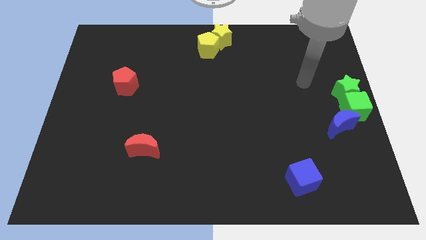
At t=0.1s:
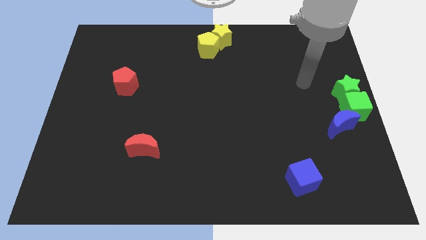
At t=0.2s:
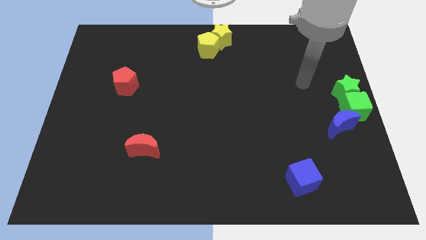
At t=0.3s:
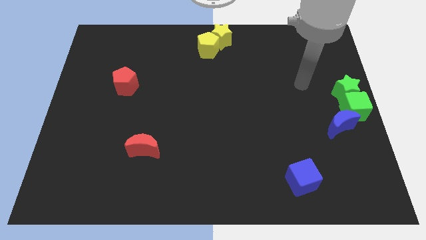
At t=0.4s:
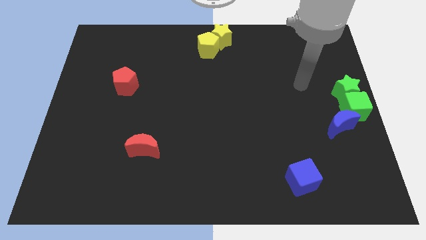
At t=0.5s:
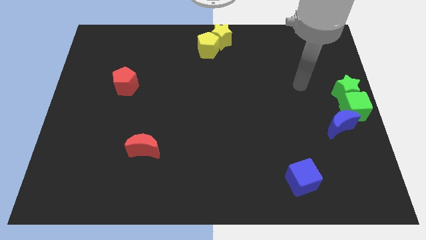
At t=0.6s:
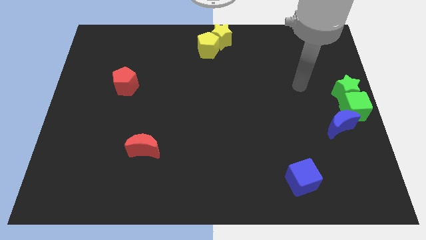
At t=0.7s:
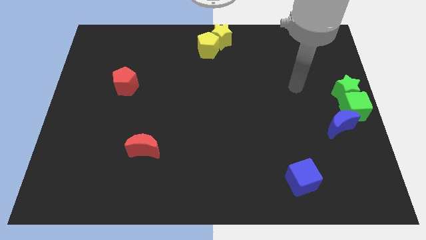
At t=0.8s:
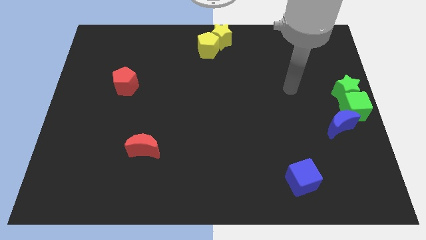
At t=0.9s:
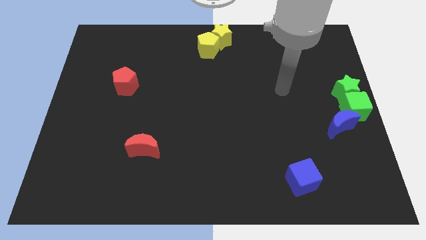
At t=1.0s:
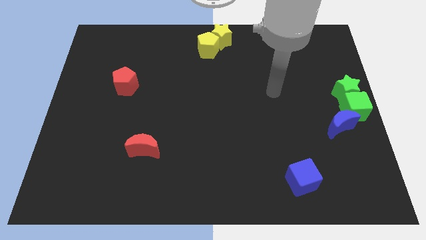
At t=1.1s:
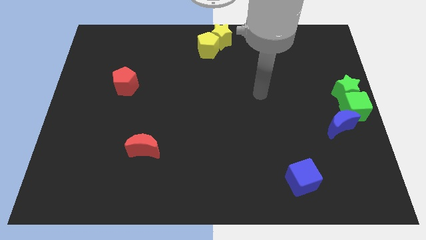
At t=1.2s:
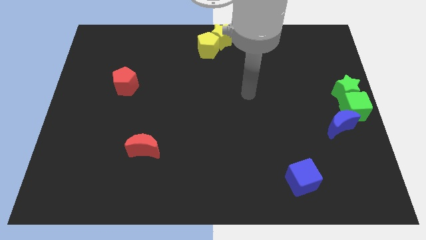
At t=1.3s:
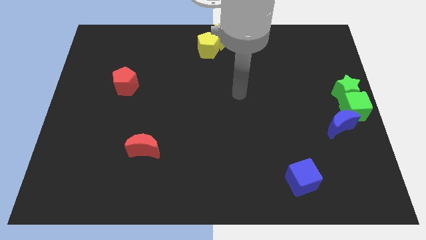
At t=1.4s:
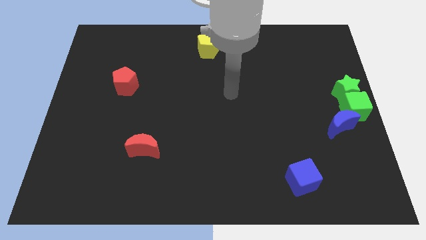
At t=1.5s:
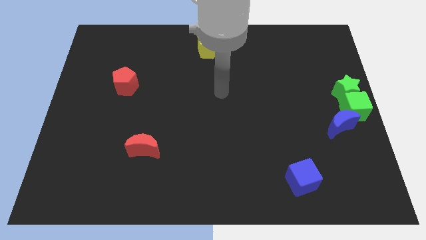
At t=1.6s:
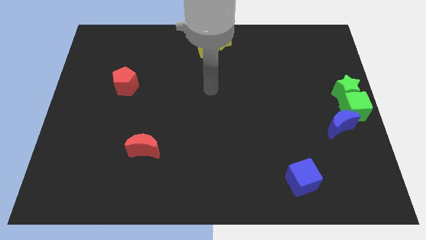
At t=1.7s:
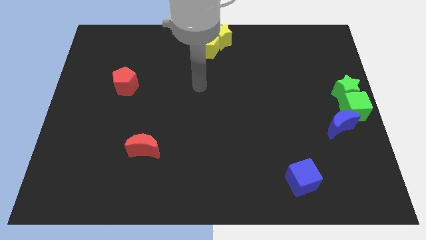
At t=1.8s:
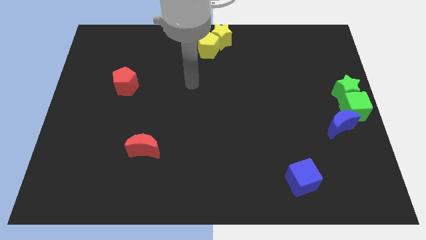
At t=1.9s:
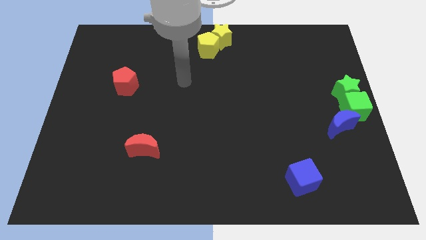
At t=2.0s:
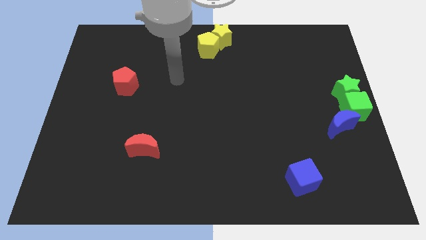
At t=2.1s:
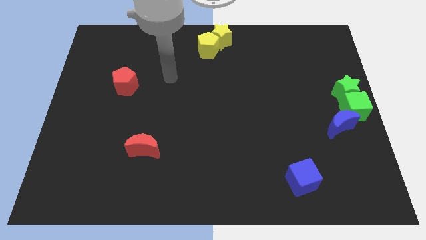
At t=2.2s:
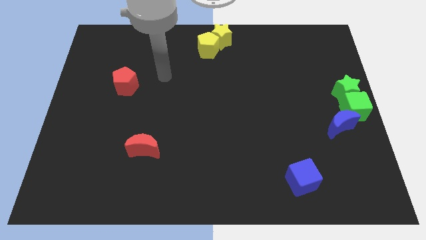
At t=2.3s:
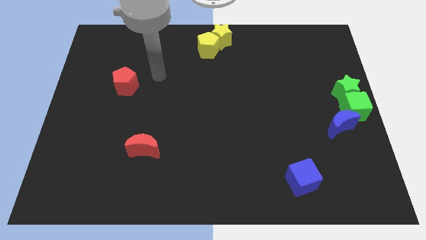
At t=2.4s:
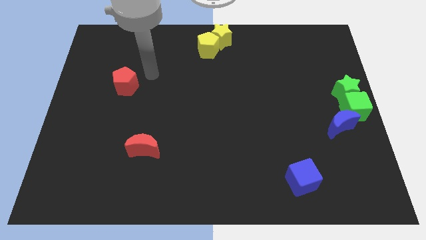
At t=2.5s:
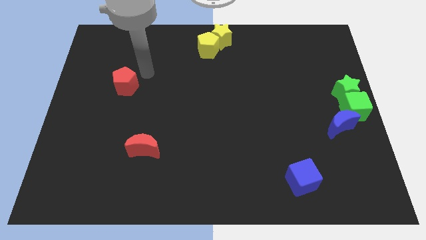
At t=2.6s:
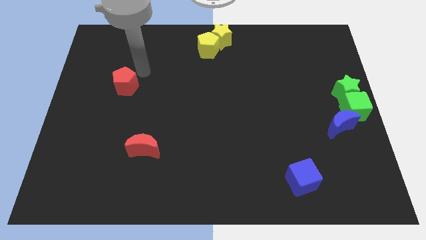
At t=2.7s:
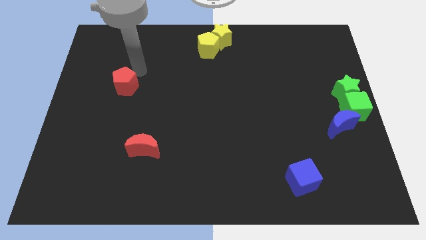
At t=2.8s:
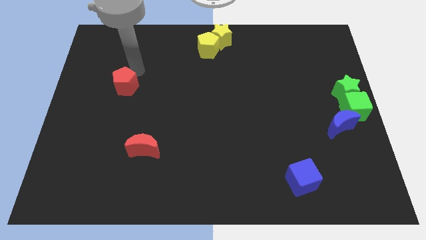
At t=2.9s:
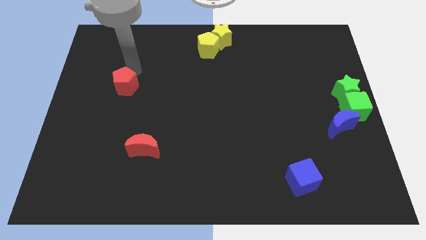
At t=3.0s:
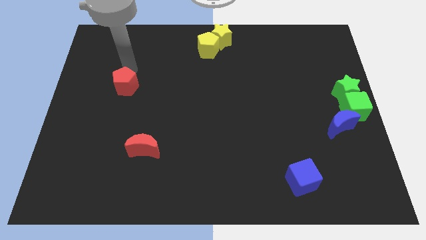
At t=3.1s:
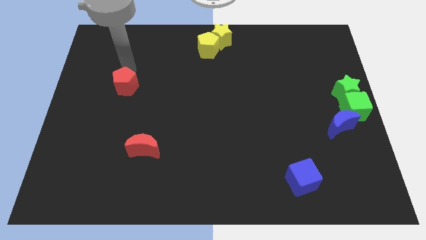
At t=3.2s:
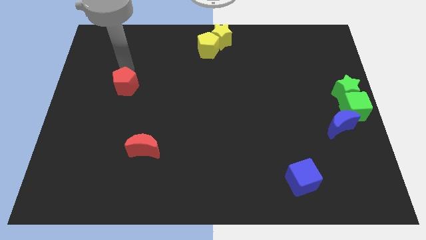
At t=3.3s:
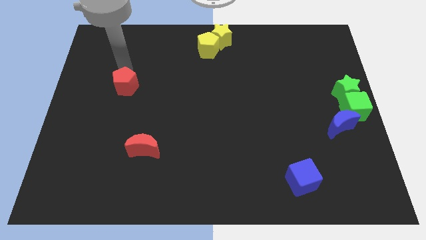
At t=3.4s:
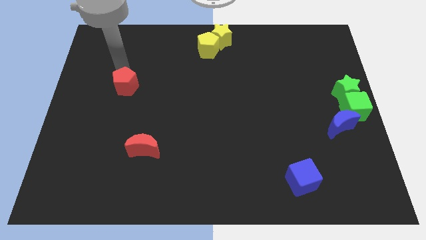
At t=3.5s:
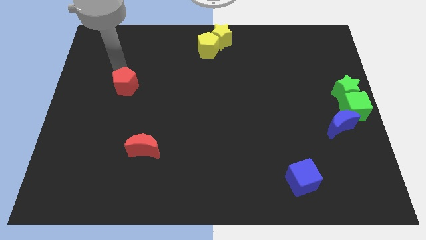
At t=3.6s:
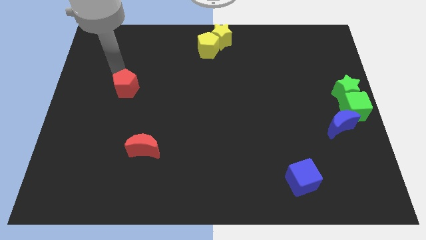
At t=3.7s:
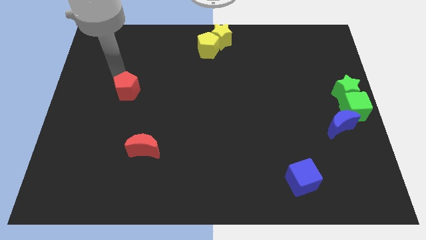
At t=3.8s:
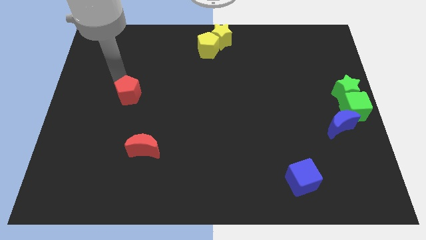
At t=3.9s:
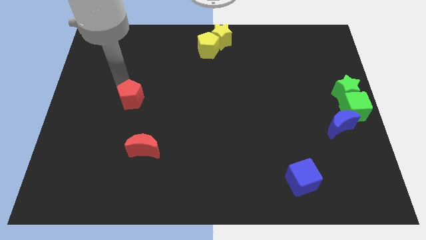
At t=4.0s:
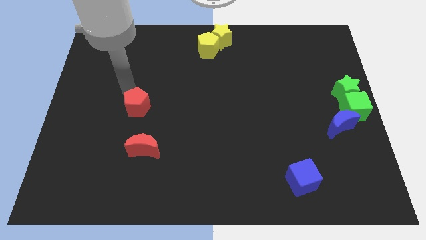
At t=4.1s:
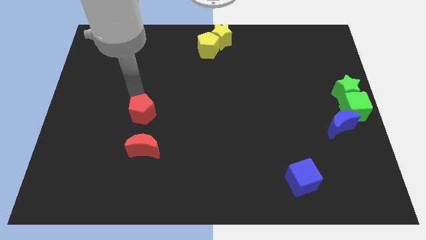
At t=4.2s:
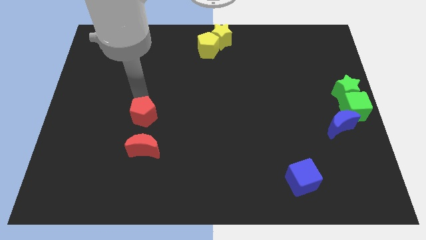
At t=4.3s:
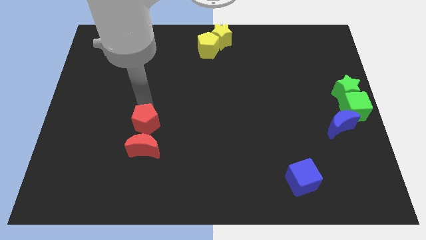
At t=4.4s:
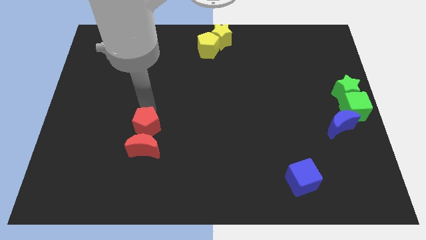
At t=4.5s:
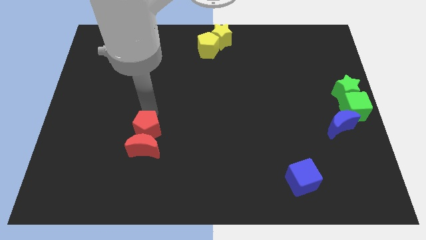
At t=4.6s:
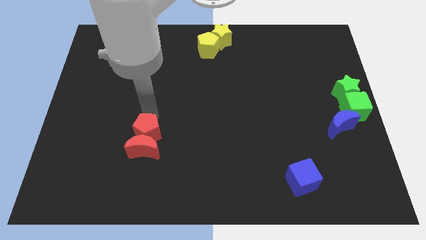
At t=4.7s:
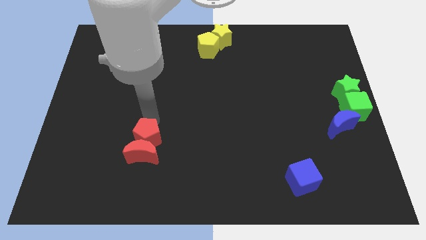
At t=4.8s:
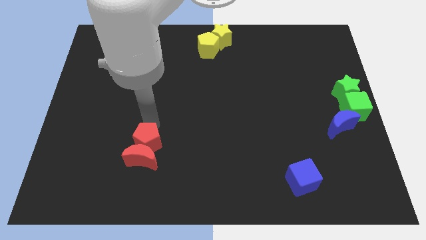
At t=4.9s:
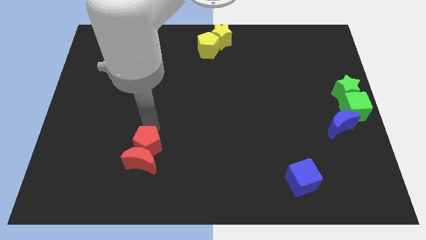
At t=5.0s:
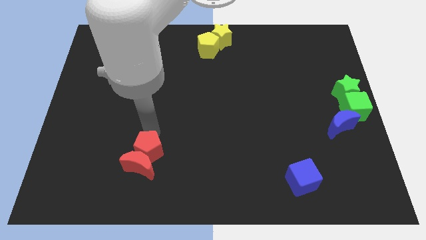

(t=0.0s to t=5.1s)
push the red pentagon into the red moon

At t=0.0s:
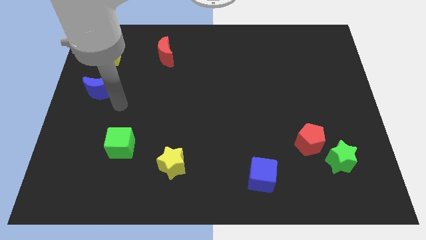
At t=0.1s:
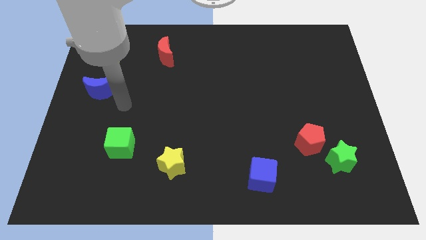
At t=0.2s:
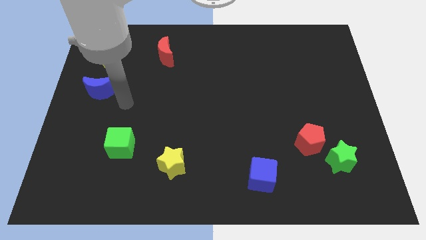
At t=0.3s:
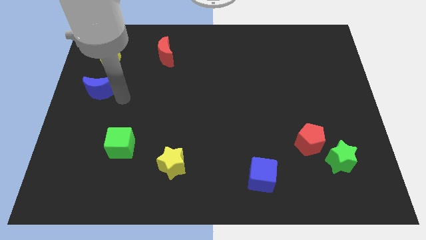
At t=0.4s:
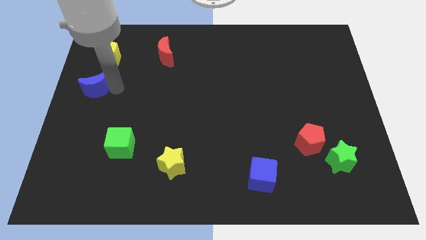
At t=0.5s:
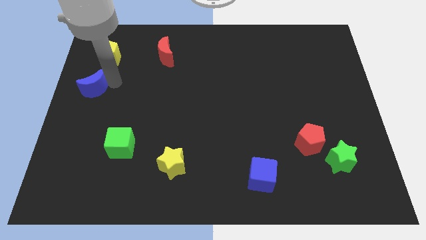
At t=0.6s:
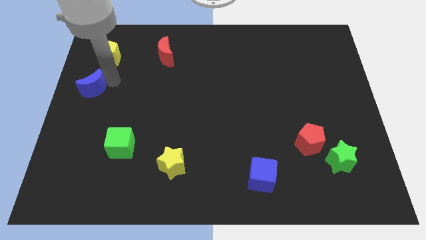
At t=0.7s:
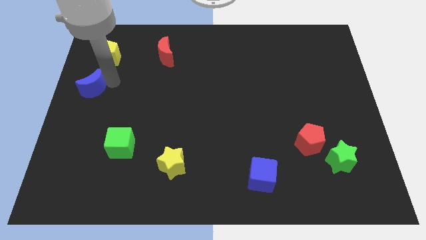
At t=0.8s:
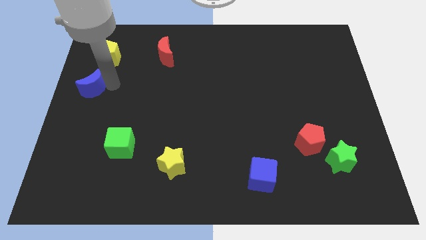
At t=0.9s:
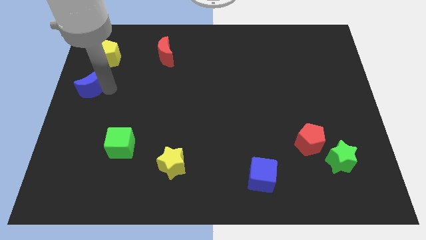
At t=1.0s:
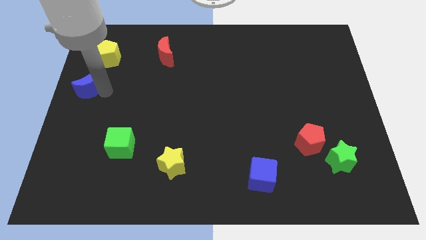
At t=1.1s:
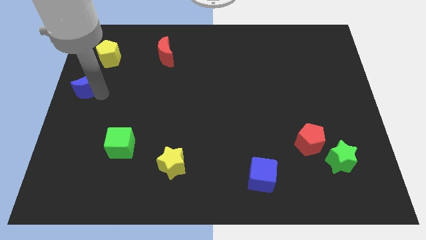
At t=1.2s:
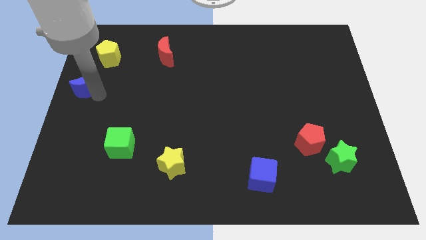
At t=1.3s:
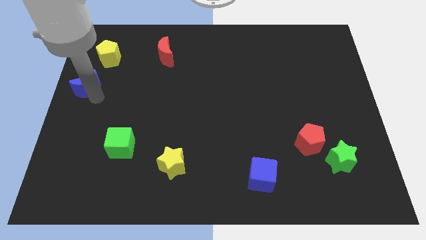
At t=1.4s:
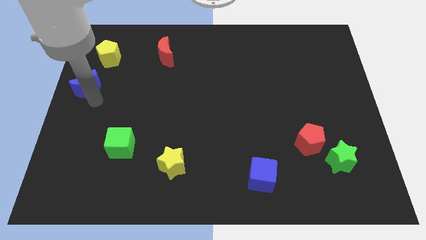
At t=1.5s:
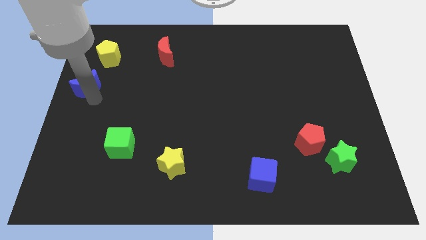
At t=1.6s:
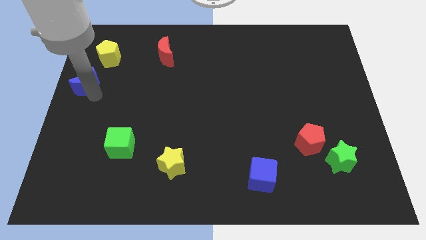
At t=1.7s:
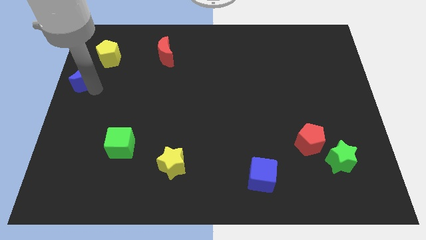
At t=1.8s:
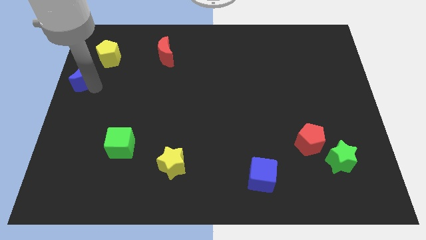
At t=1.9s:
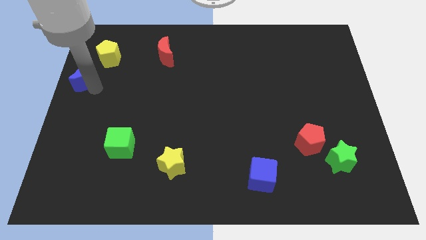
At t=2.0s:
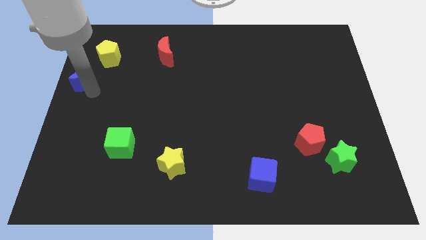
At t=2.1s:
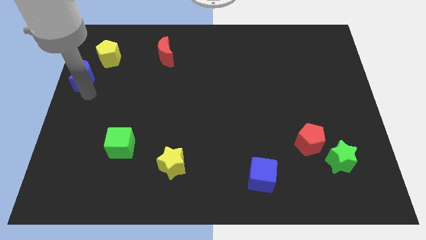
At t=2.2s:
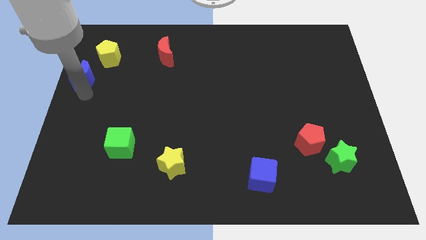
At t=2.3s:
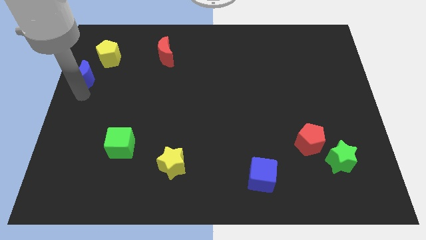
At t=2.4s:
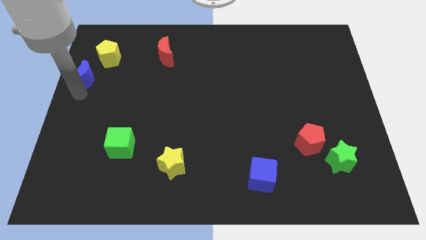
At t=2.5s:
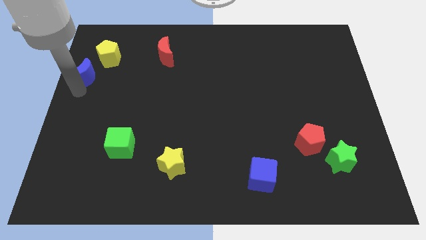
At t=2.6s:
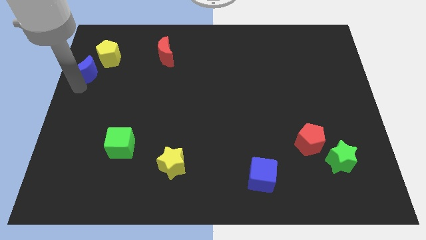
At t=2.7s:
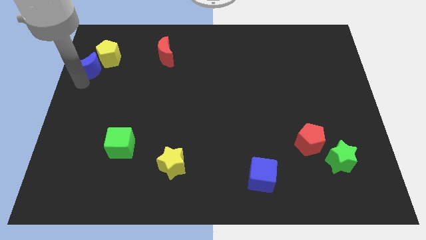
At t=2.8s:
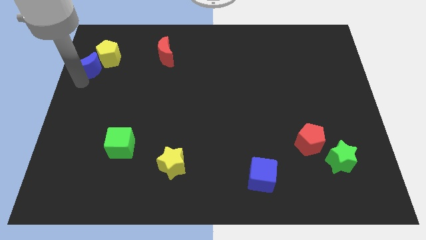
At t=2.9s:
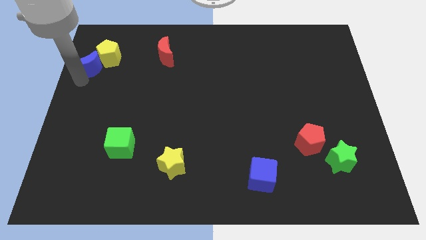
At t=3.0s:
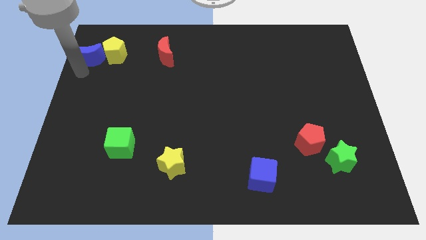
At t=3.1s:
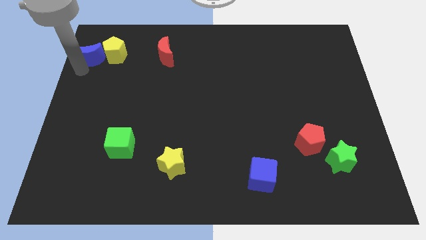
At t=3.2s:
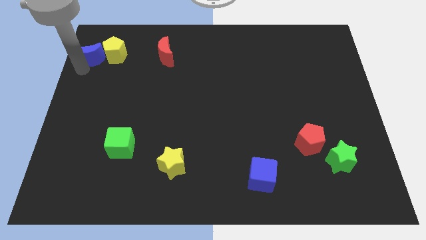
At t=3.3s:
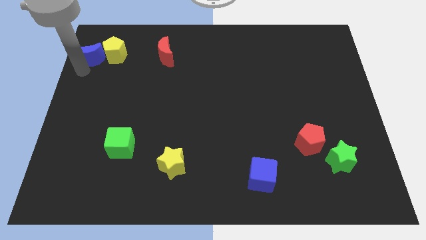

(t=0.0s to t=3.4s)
push the blue crescent to the left of the yellow pentagon

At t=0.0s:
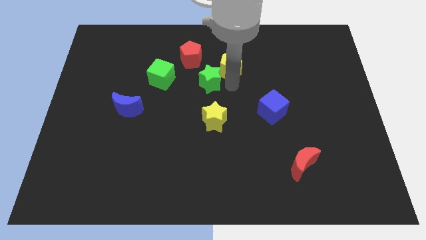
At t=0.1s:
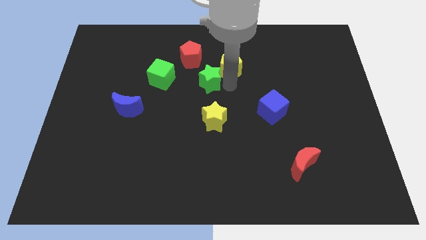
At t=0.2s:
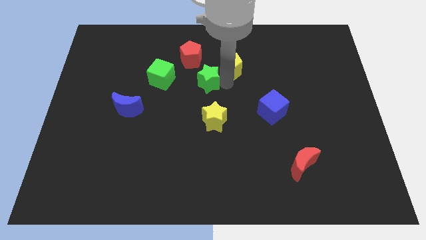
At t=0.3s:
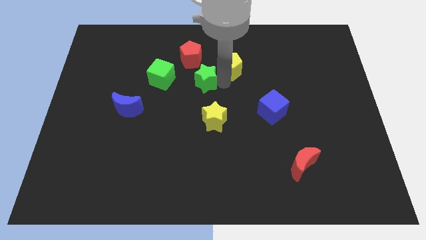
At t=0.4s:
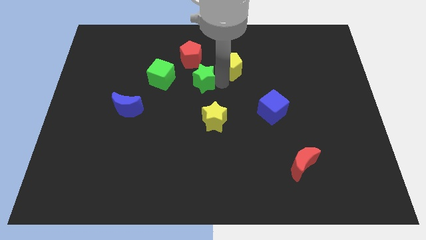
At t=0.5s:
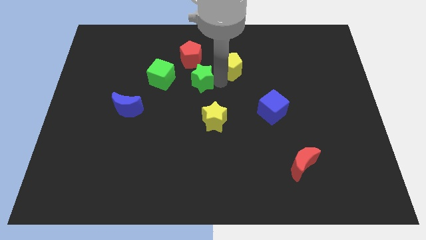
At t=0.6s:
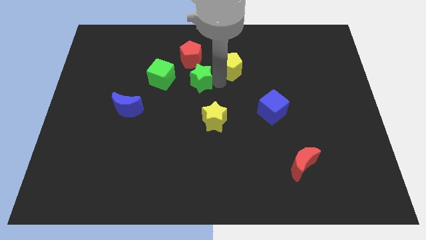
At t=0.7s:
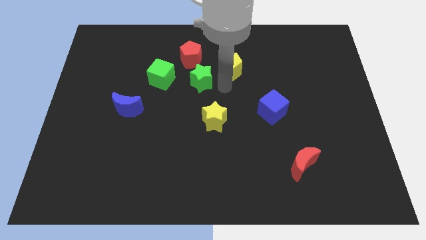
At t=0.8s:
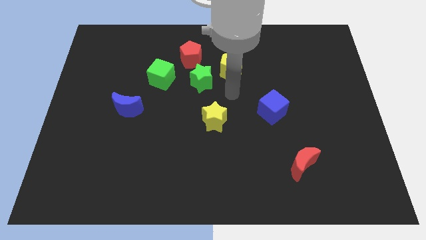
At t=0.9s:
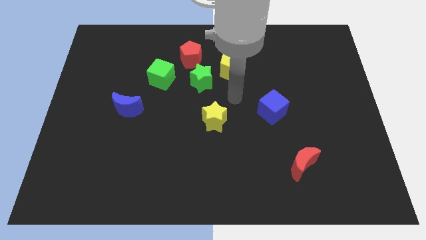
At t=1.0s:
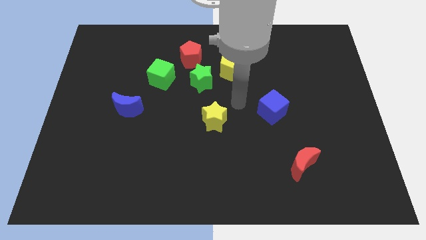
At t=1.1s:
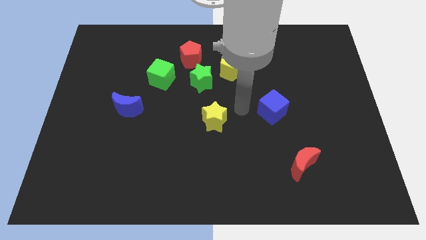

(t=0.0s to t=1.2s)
place the green star between red pentagon and yellow star
